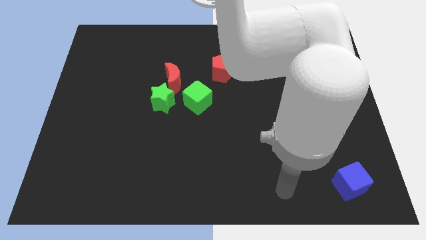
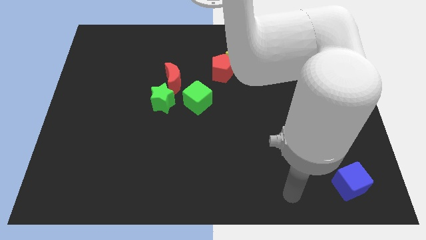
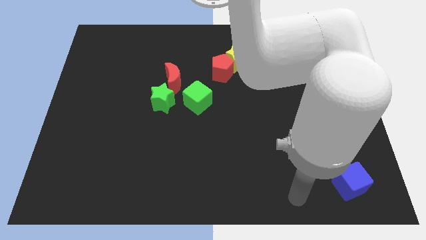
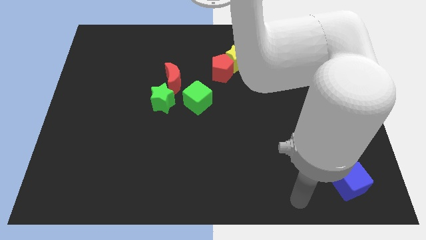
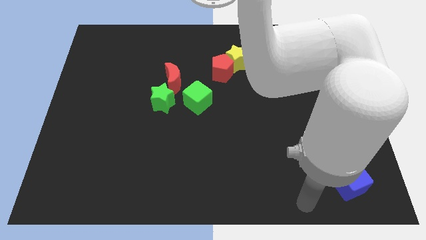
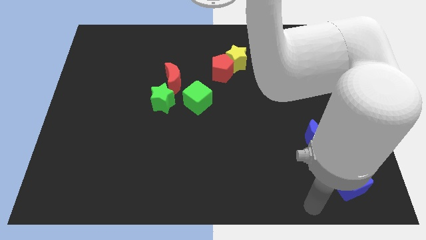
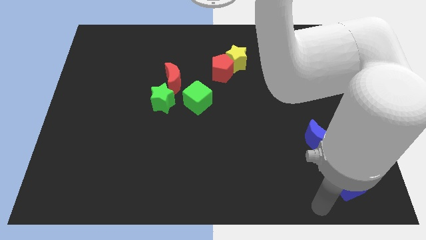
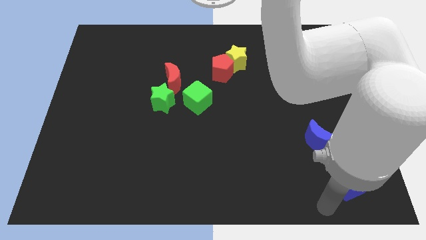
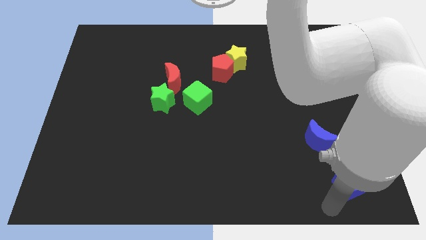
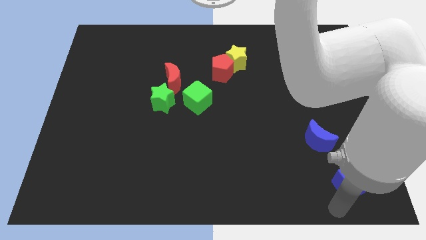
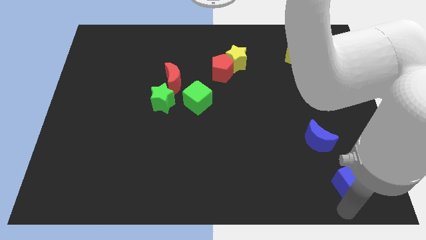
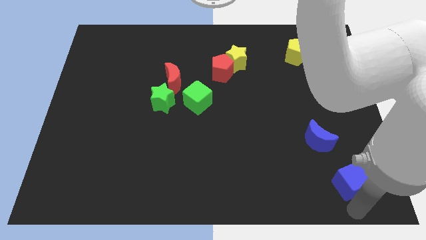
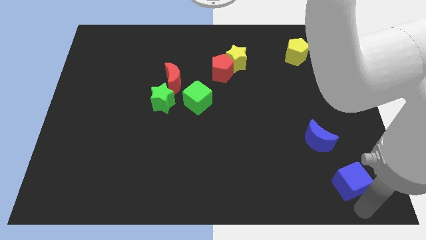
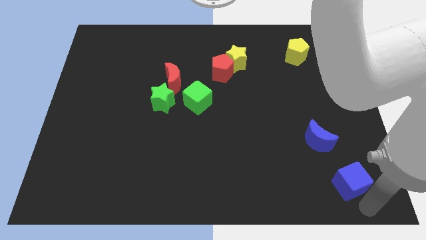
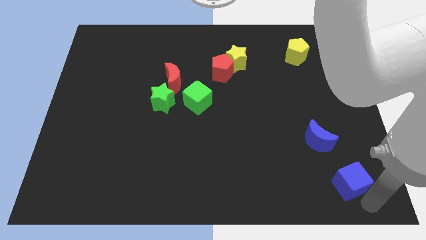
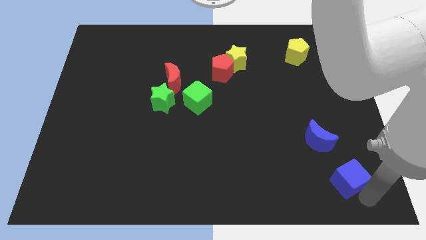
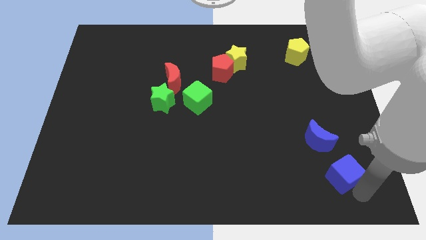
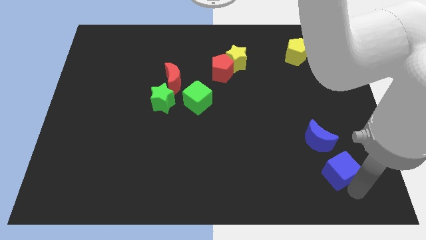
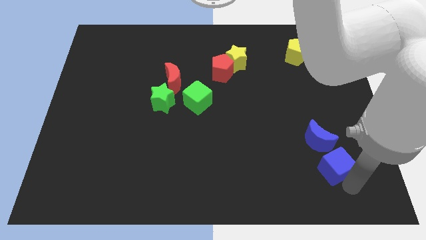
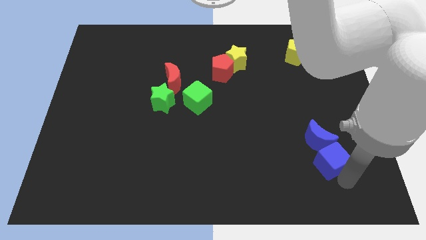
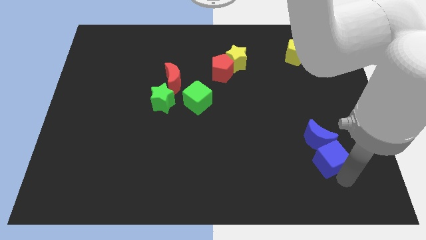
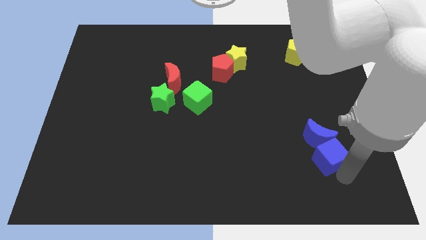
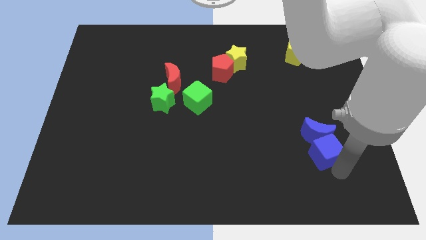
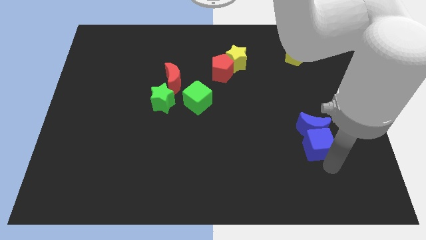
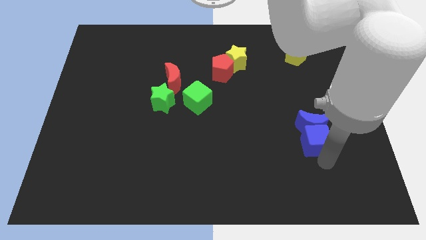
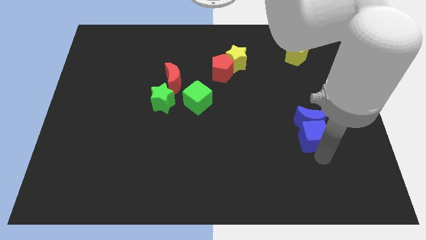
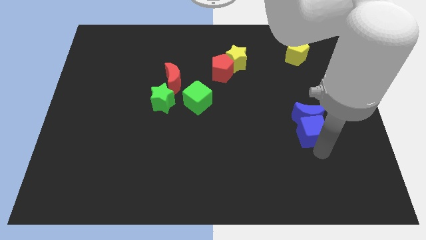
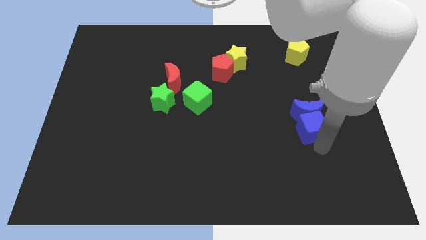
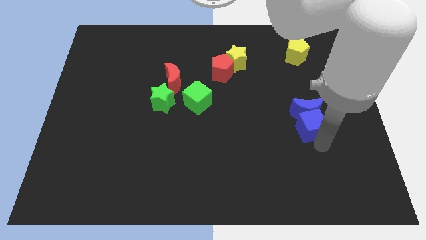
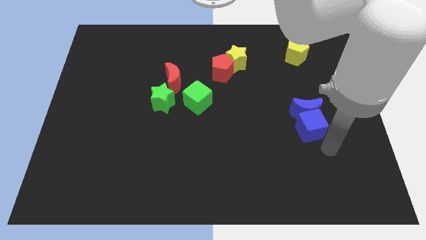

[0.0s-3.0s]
put blue blocks together

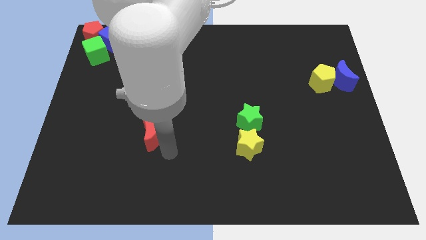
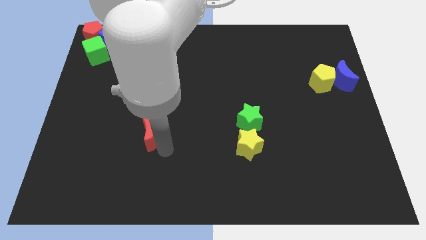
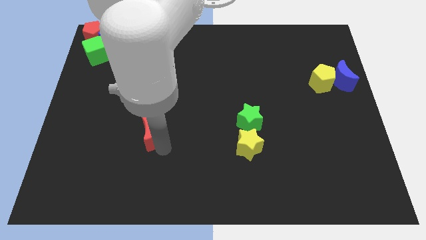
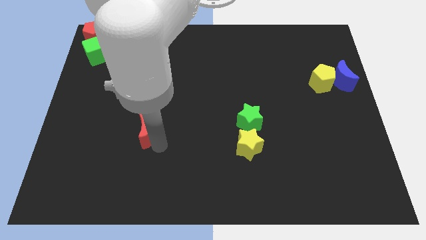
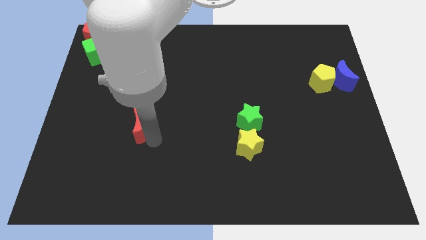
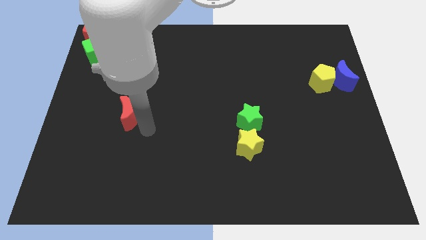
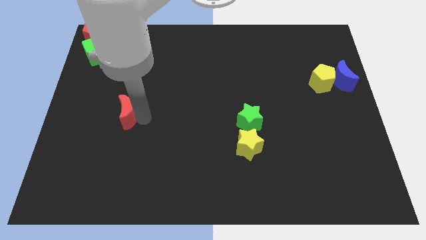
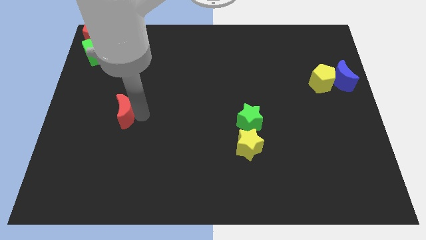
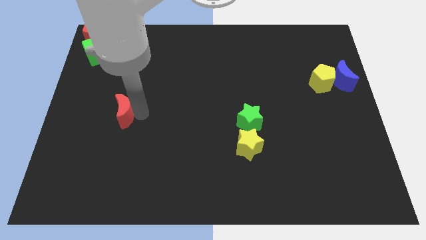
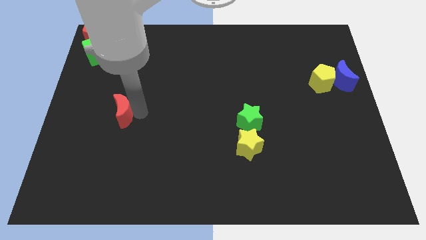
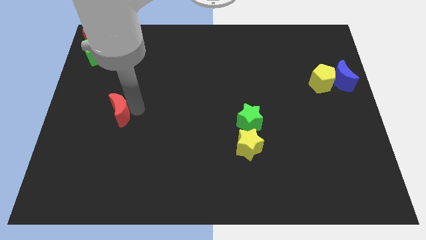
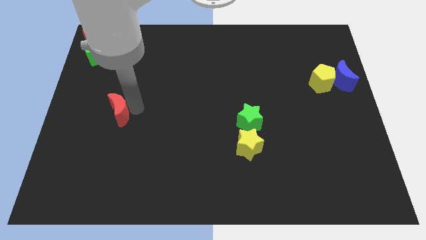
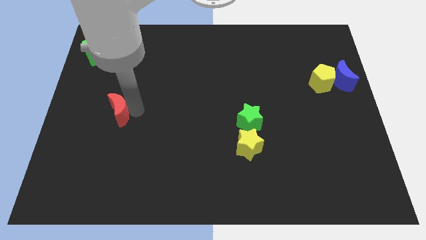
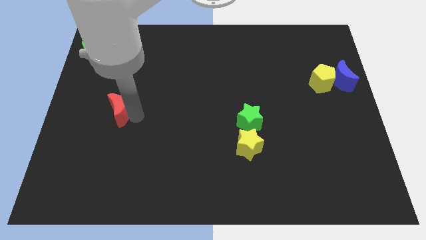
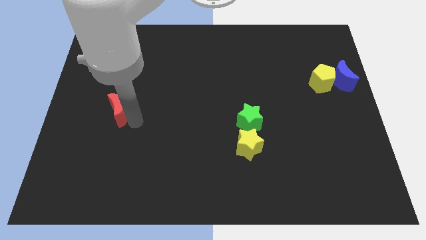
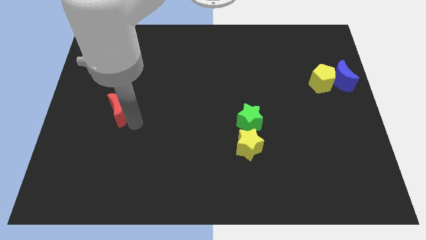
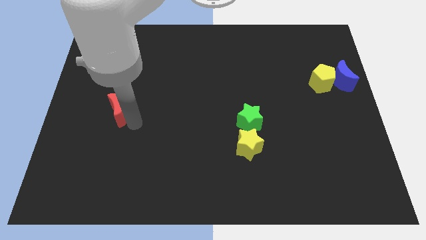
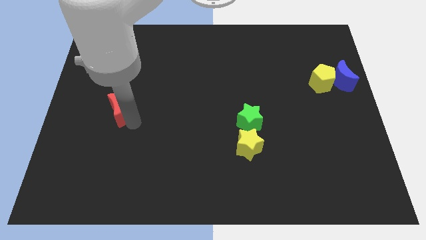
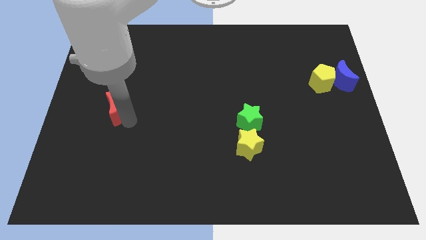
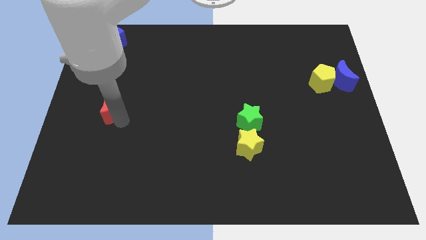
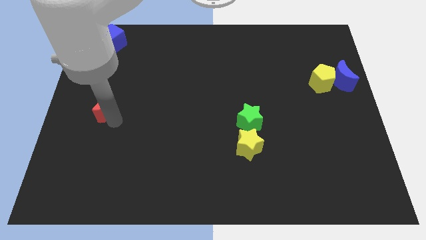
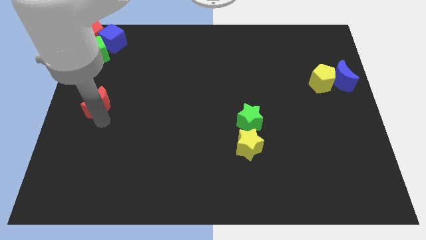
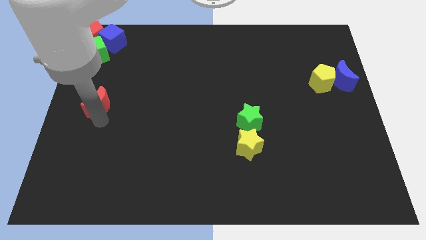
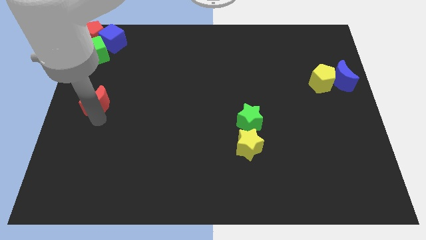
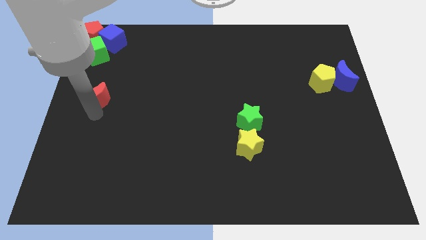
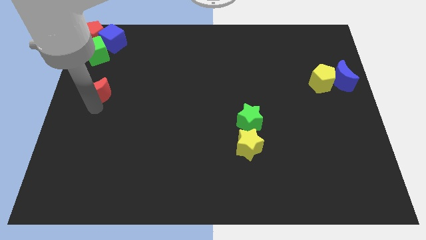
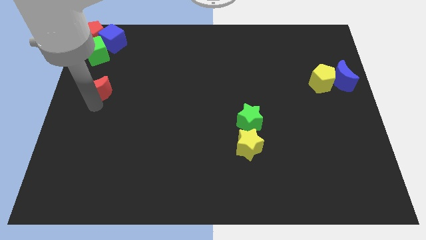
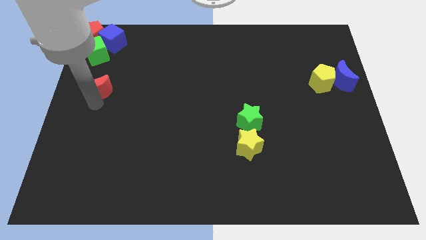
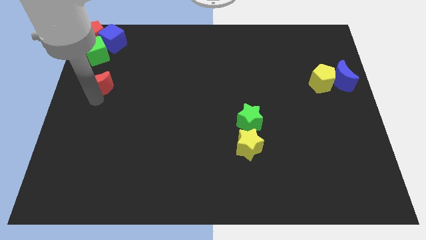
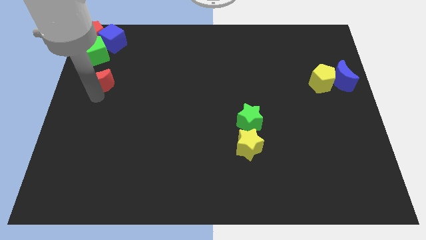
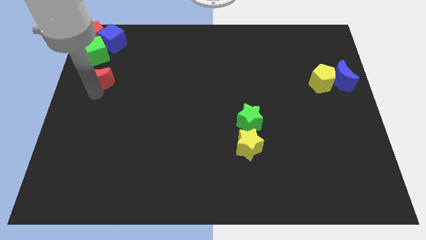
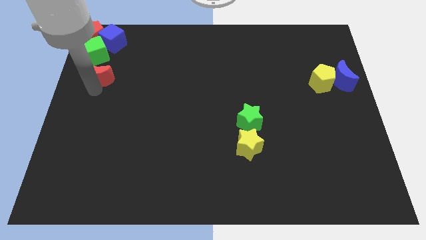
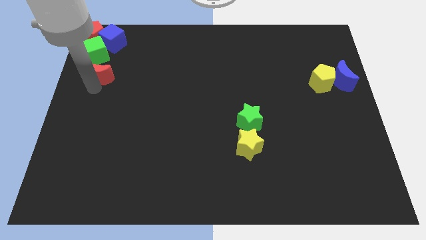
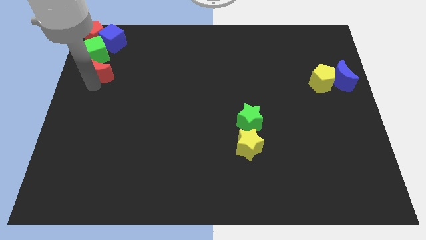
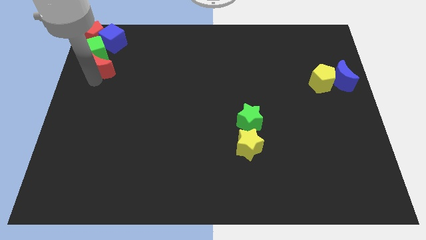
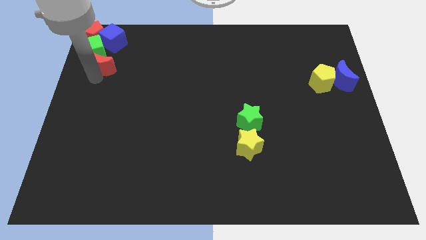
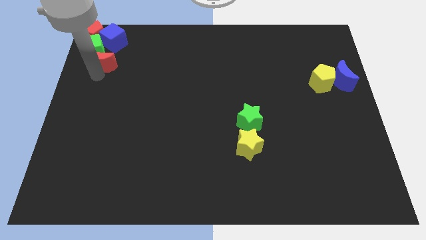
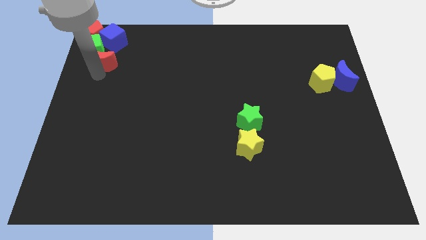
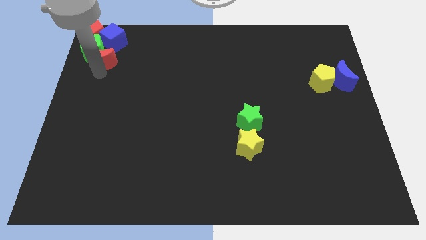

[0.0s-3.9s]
move the red moon down to the green cube

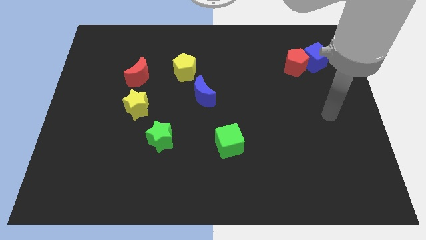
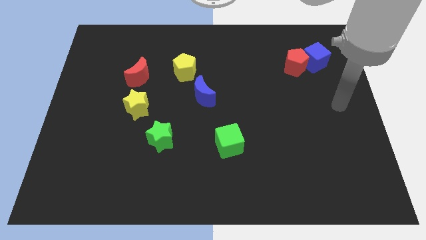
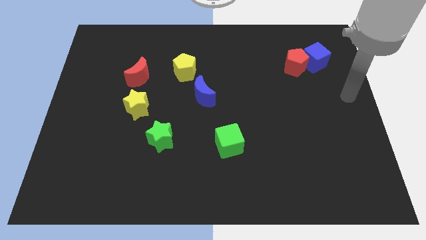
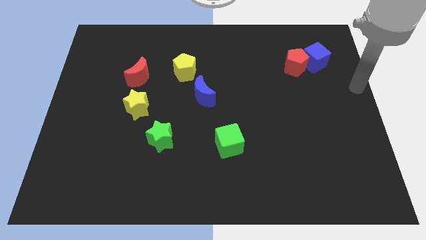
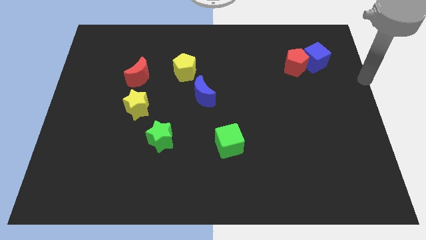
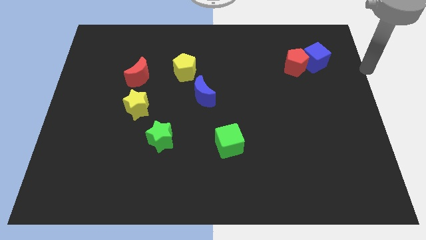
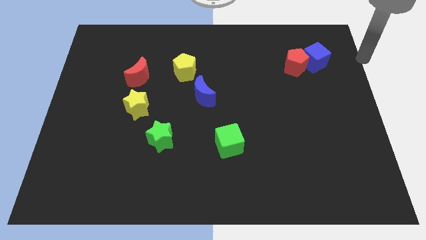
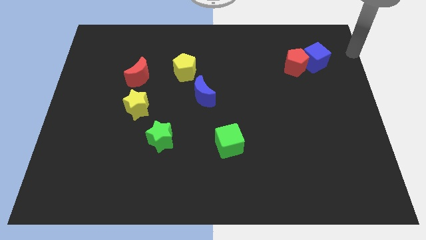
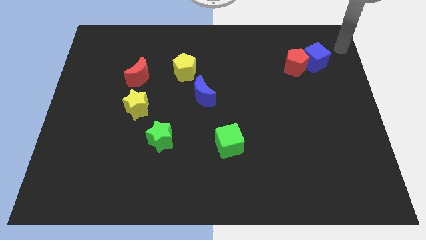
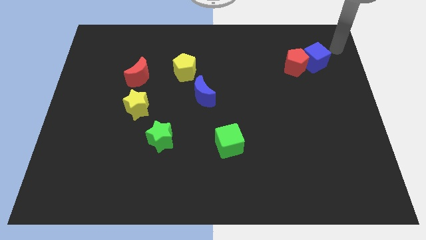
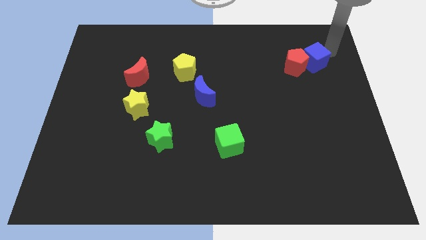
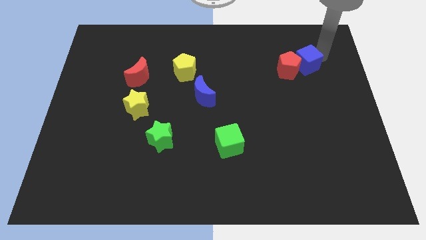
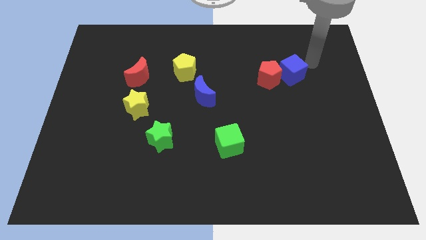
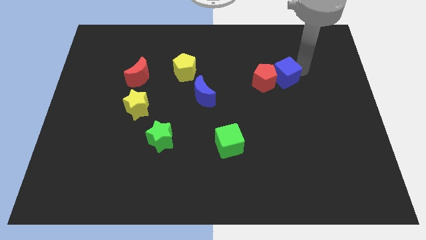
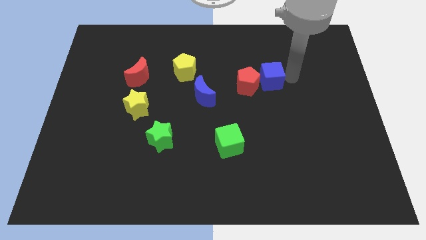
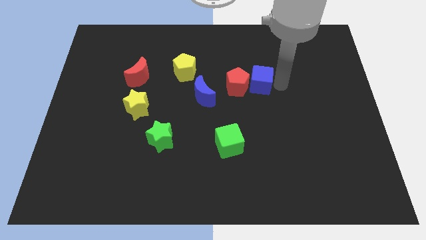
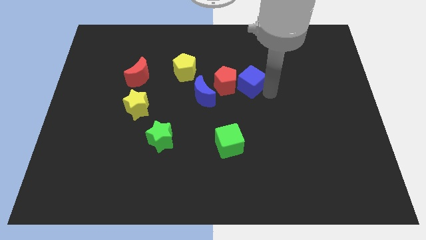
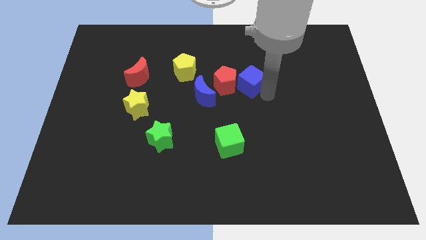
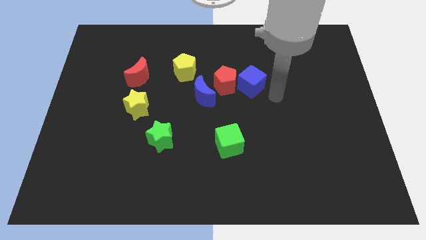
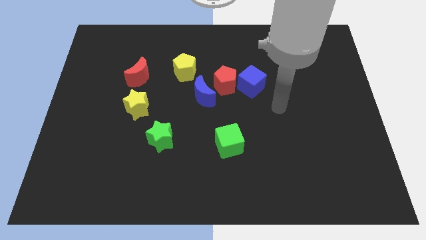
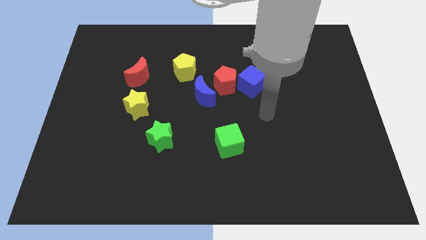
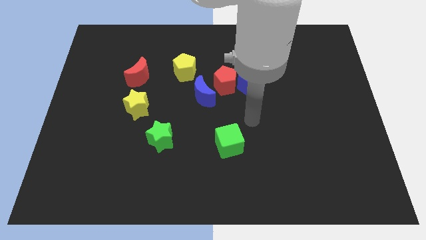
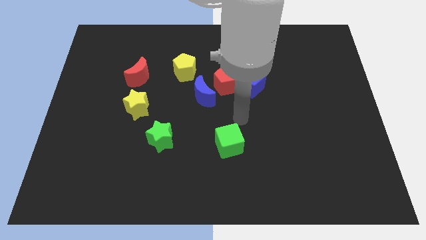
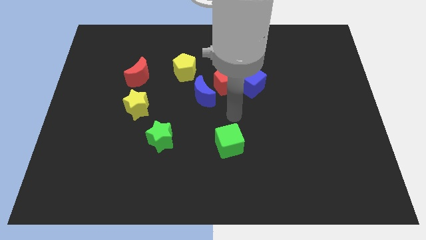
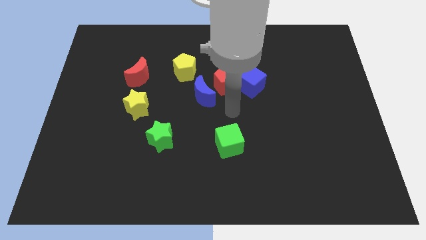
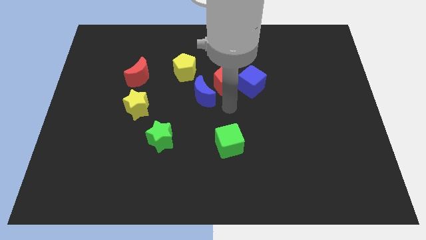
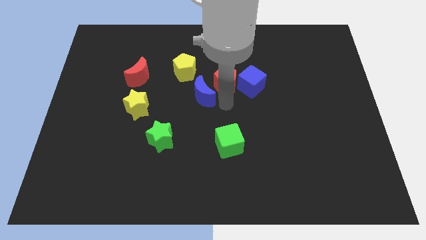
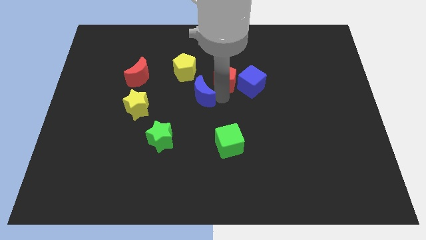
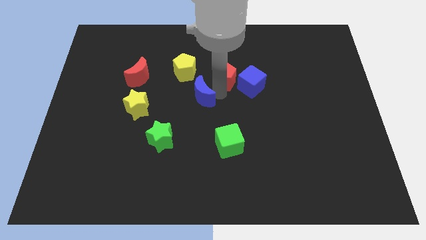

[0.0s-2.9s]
push the blue cube into the red pentagon
